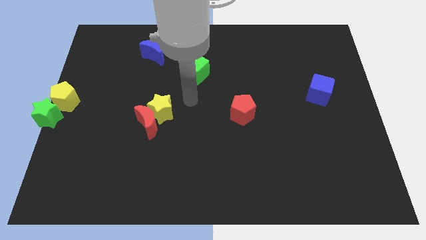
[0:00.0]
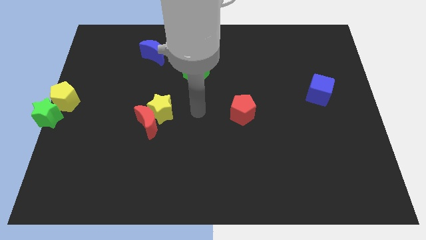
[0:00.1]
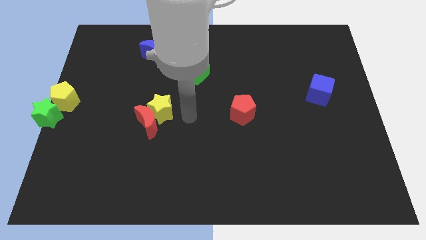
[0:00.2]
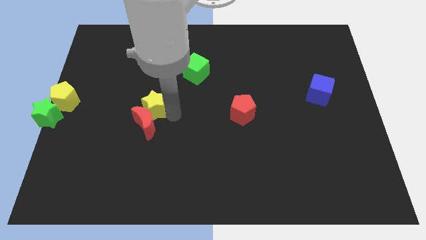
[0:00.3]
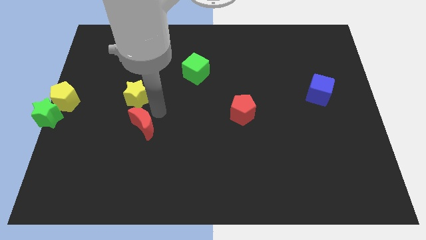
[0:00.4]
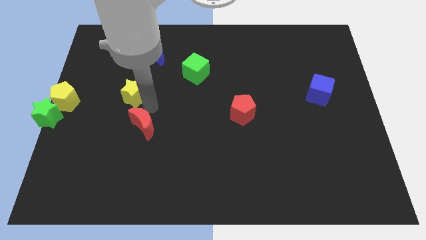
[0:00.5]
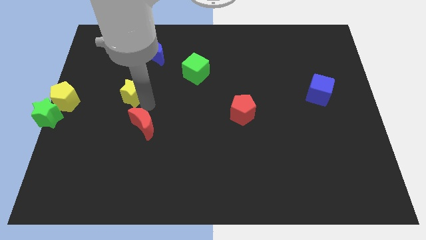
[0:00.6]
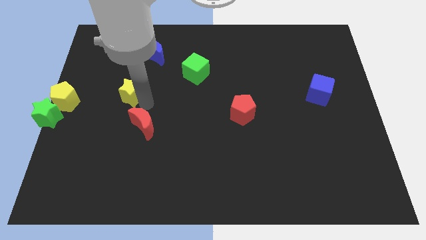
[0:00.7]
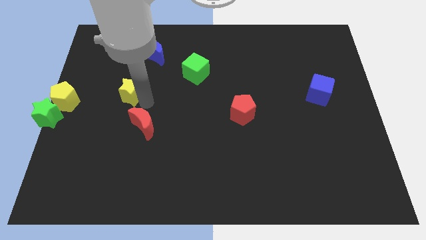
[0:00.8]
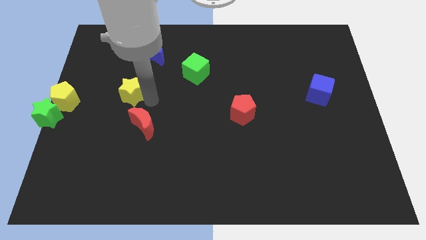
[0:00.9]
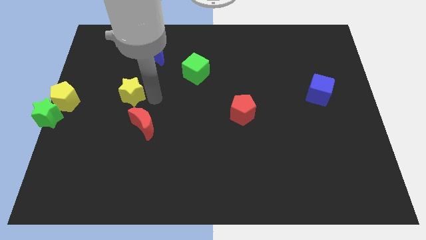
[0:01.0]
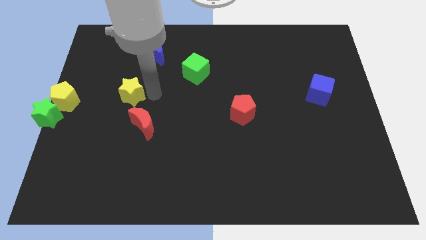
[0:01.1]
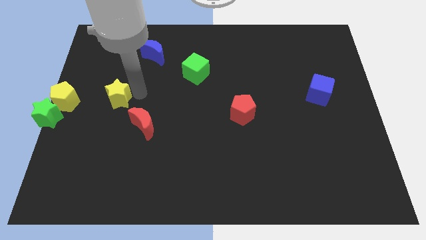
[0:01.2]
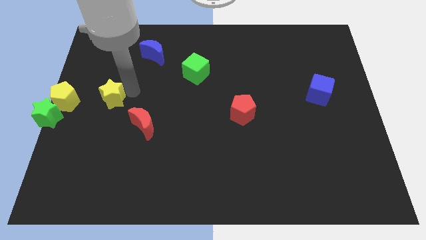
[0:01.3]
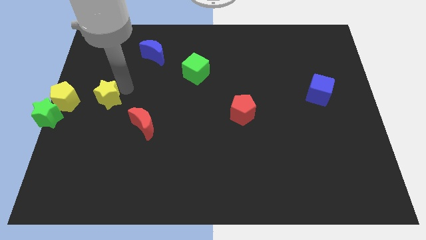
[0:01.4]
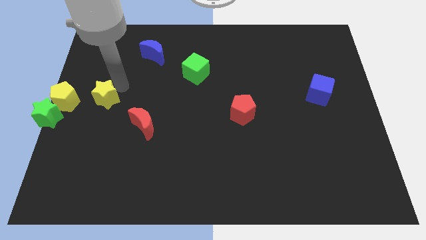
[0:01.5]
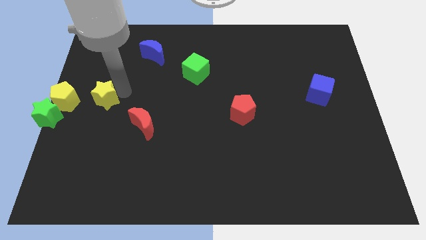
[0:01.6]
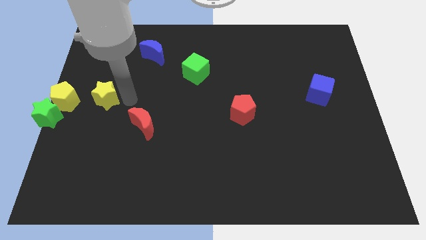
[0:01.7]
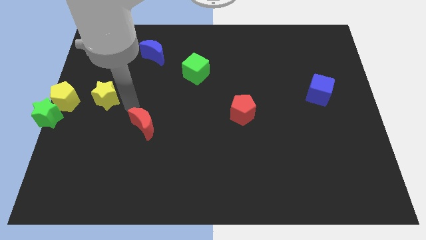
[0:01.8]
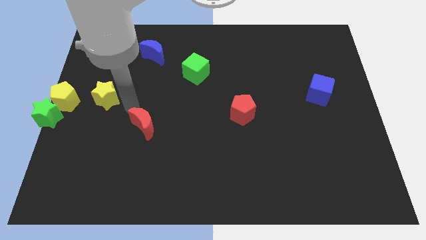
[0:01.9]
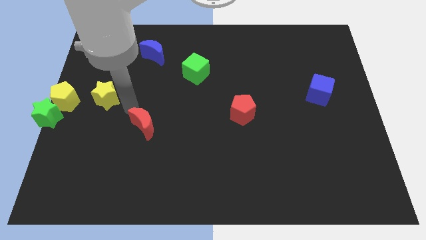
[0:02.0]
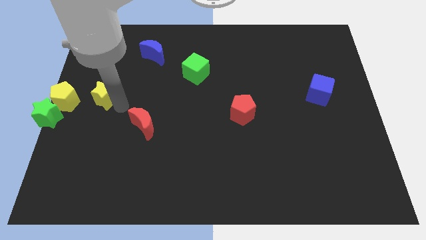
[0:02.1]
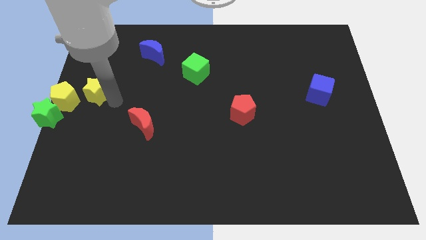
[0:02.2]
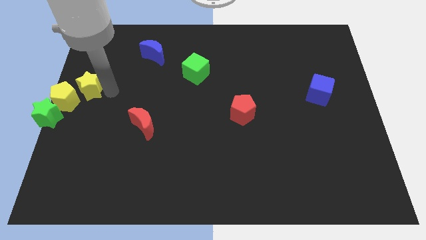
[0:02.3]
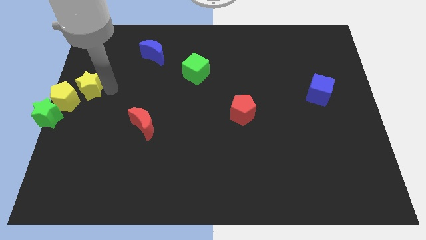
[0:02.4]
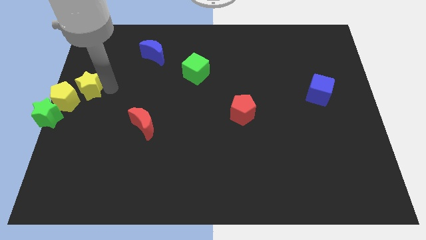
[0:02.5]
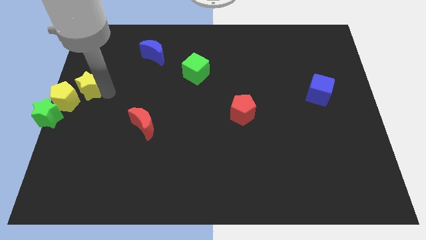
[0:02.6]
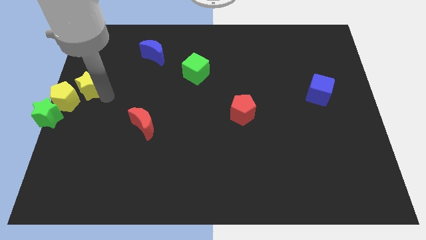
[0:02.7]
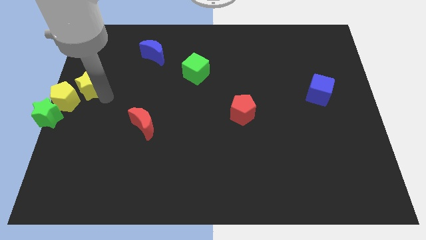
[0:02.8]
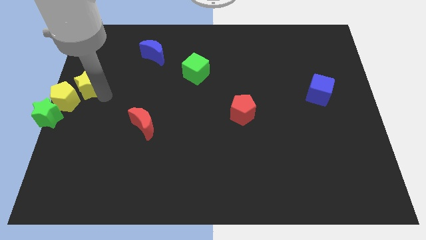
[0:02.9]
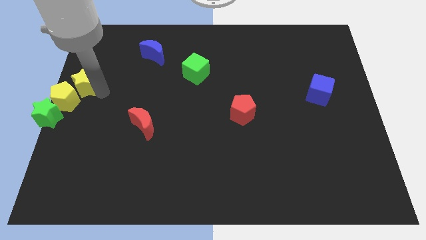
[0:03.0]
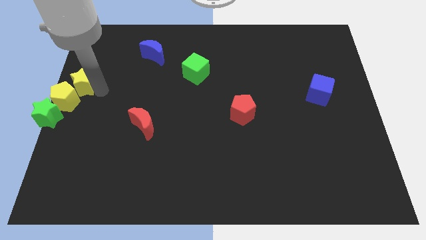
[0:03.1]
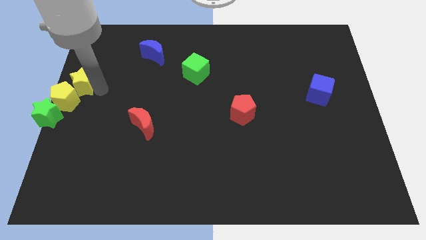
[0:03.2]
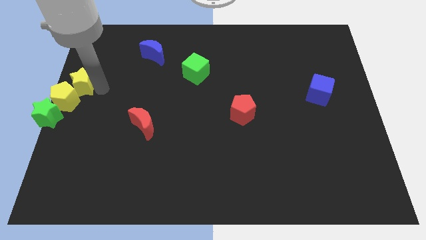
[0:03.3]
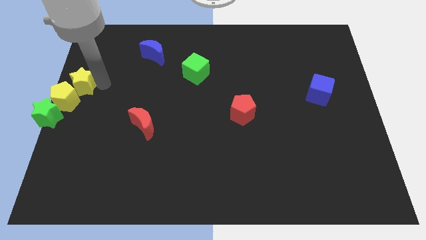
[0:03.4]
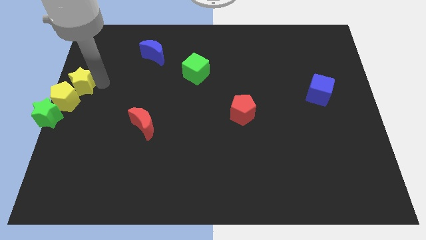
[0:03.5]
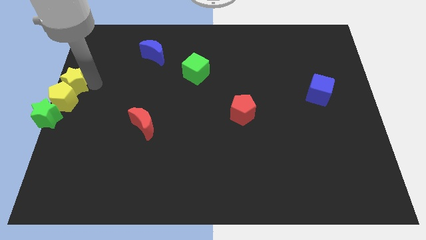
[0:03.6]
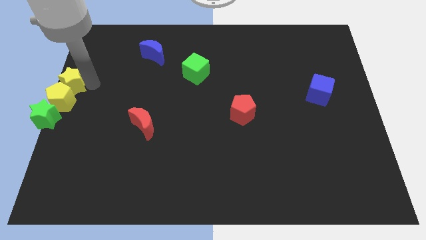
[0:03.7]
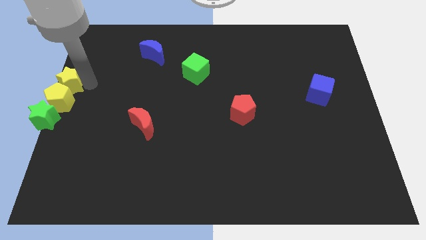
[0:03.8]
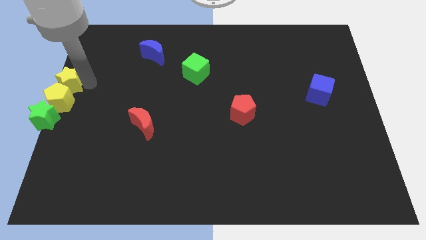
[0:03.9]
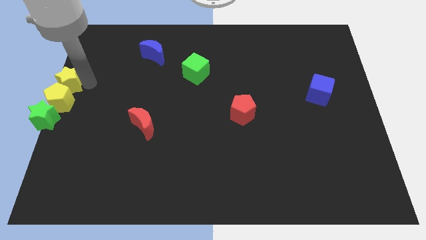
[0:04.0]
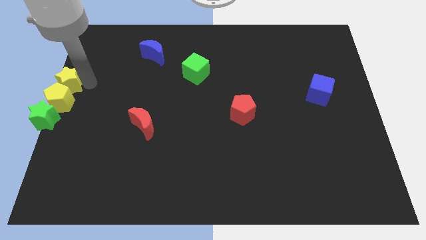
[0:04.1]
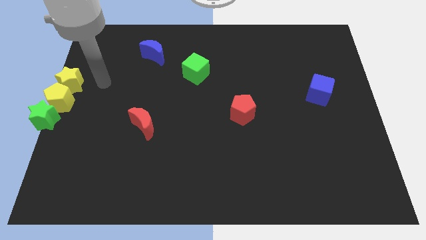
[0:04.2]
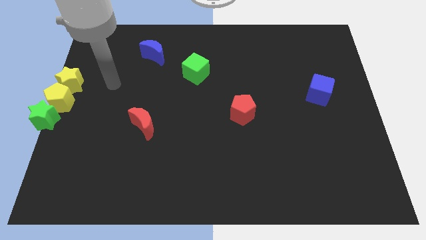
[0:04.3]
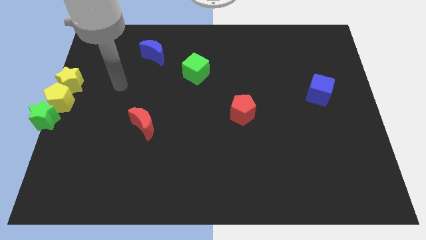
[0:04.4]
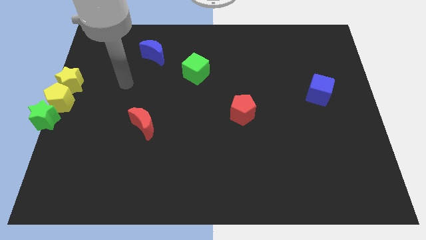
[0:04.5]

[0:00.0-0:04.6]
place the yellow star above the yellow pentagon

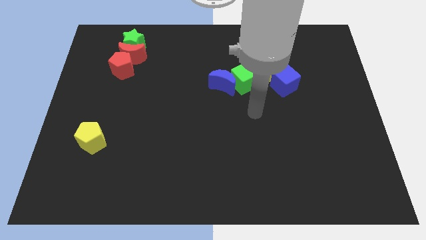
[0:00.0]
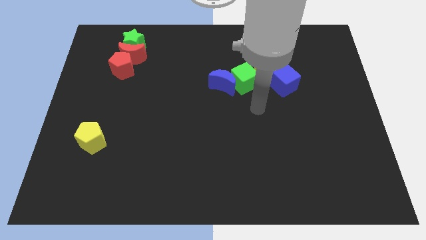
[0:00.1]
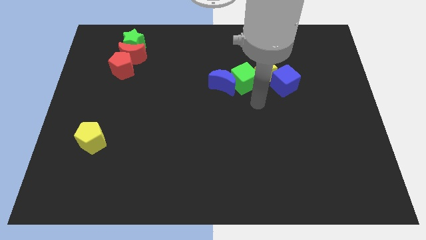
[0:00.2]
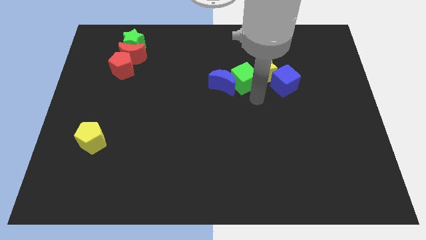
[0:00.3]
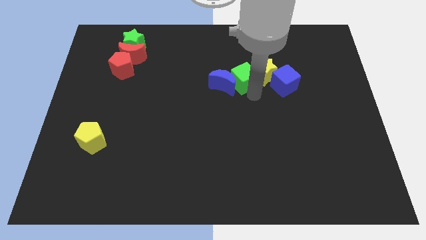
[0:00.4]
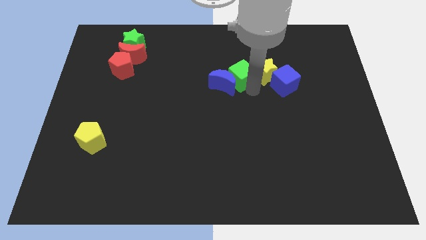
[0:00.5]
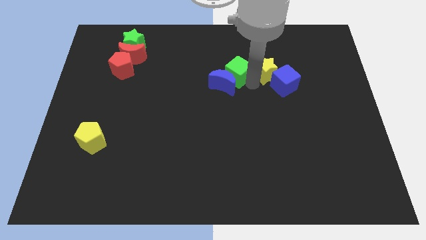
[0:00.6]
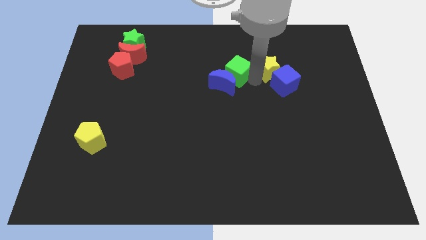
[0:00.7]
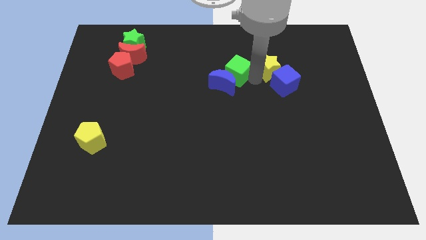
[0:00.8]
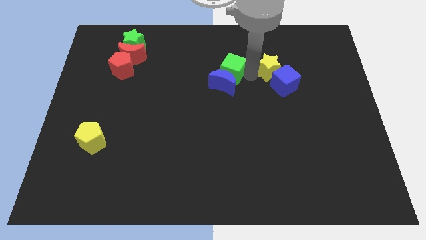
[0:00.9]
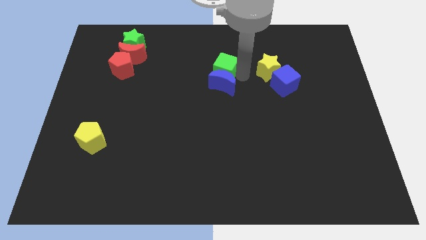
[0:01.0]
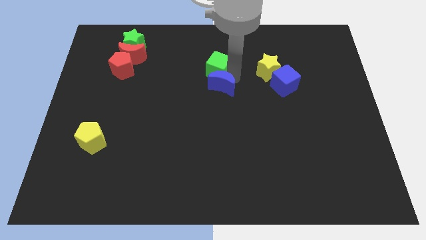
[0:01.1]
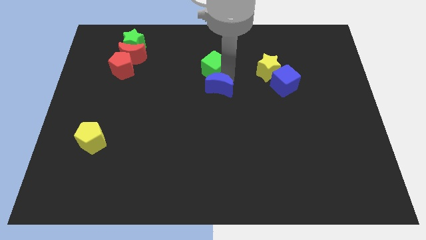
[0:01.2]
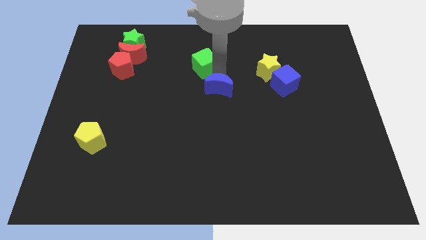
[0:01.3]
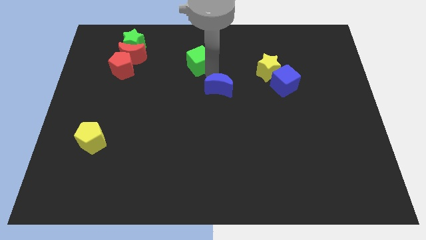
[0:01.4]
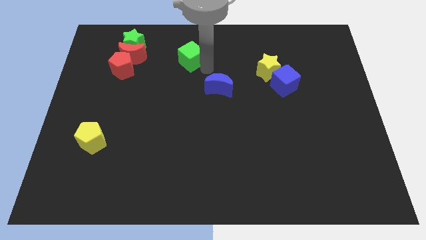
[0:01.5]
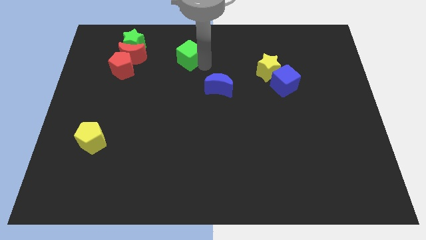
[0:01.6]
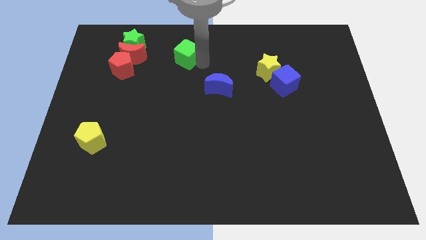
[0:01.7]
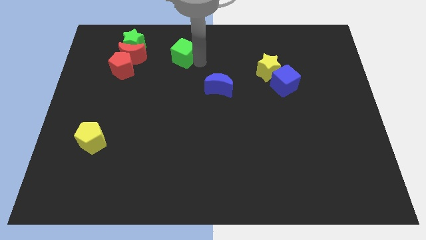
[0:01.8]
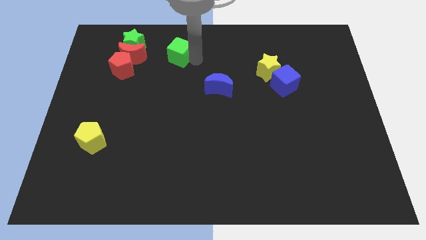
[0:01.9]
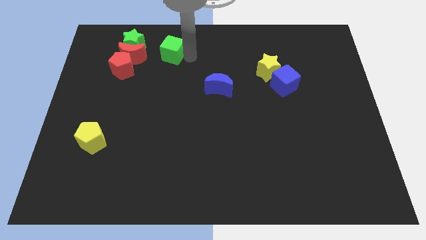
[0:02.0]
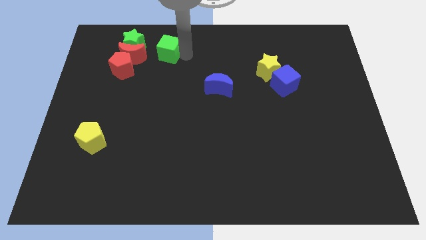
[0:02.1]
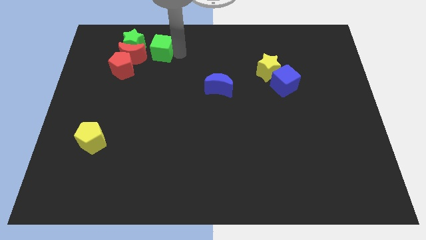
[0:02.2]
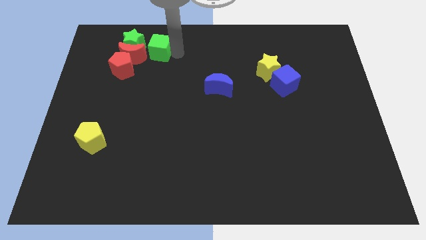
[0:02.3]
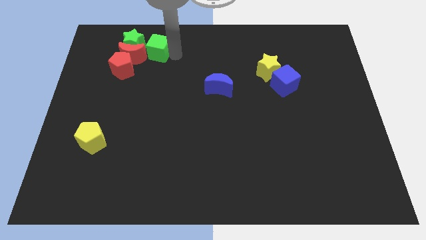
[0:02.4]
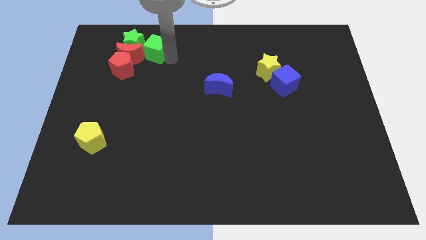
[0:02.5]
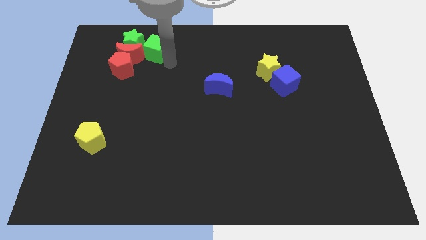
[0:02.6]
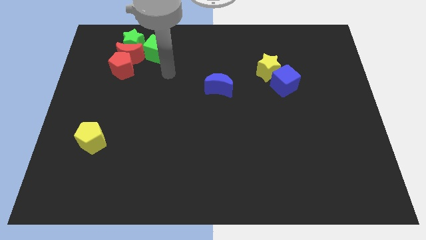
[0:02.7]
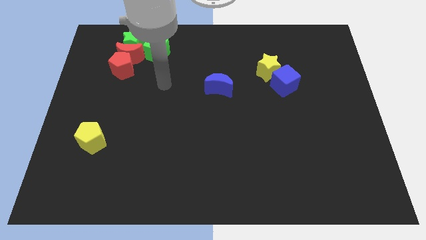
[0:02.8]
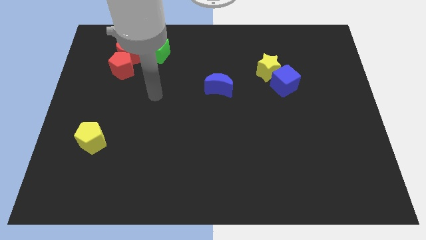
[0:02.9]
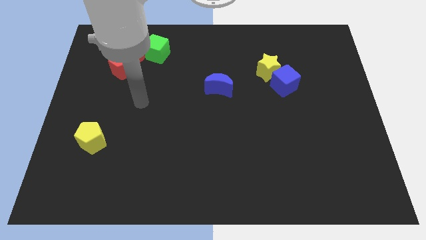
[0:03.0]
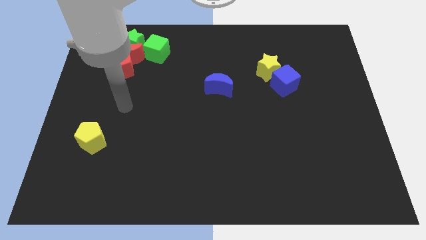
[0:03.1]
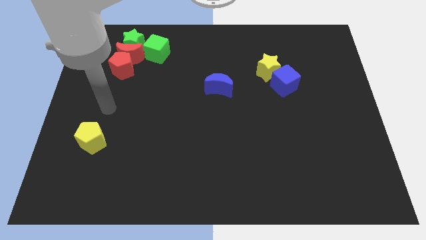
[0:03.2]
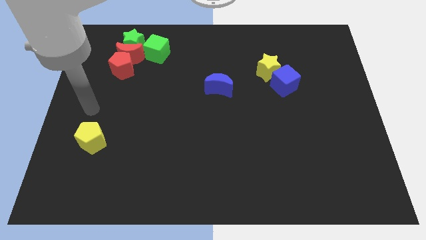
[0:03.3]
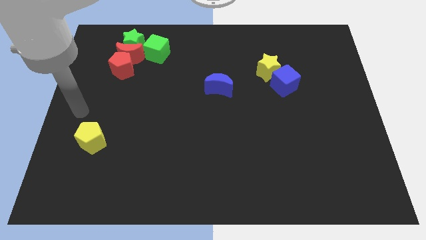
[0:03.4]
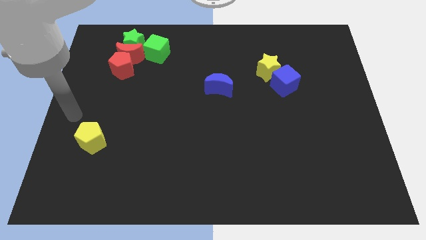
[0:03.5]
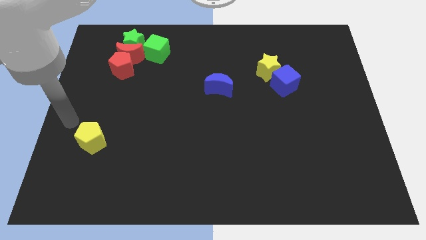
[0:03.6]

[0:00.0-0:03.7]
place the green cube right to the red moon

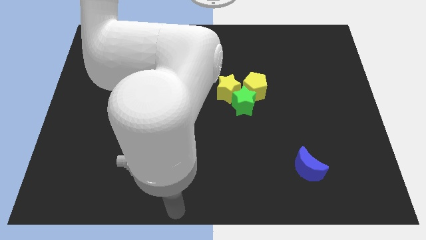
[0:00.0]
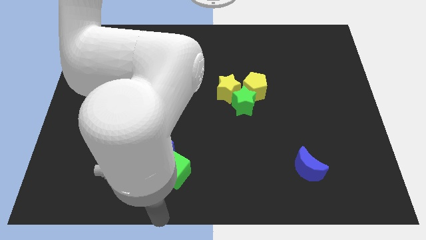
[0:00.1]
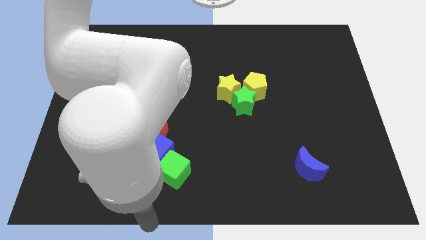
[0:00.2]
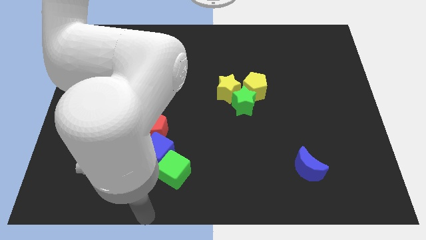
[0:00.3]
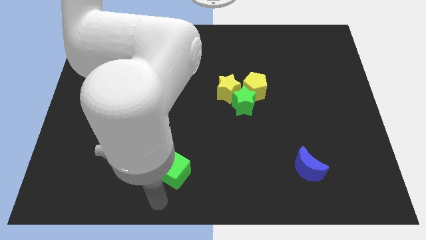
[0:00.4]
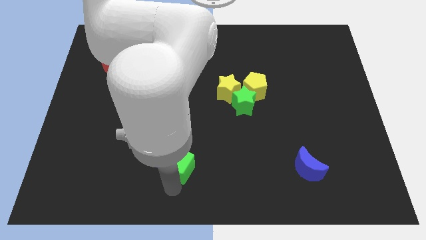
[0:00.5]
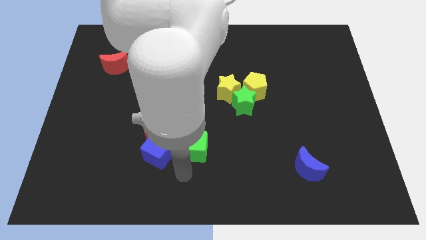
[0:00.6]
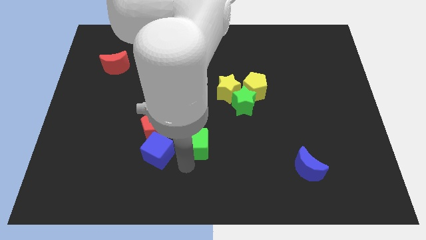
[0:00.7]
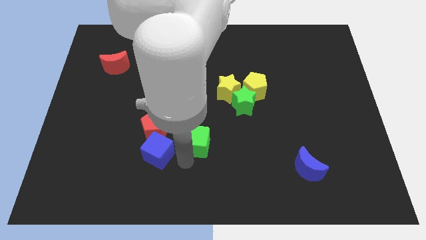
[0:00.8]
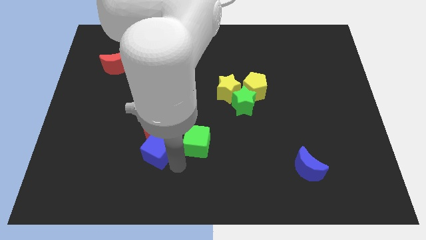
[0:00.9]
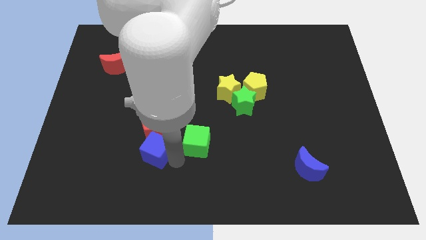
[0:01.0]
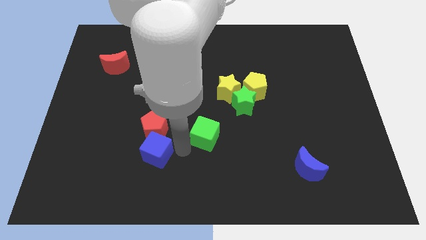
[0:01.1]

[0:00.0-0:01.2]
separate green cube from blue cube
